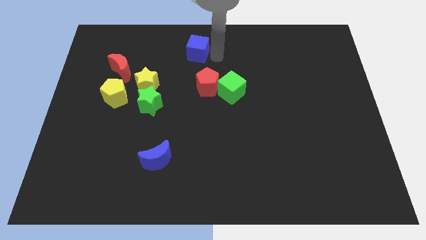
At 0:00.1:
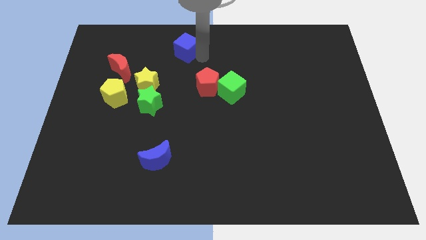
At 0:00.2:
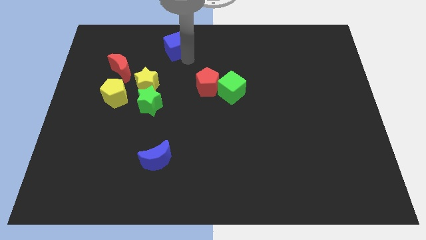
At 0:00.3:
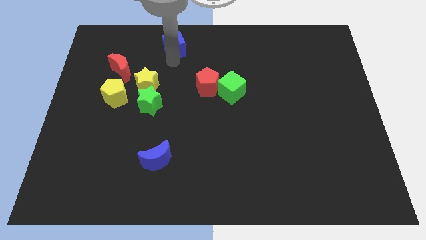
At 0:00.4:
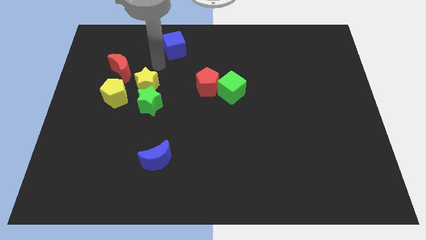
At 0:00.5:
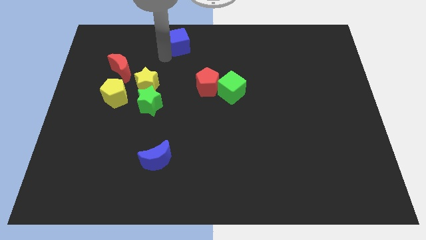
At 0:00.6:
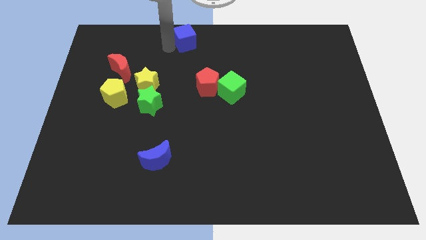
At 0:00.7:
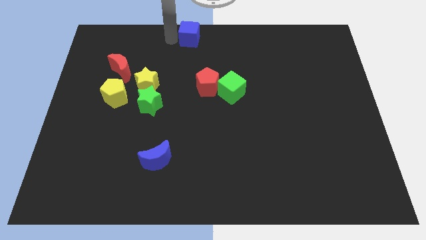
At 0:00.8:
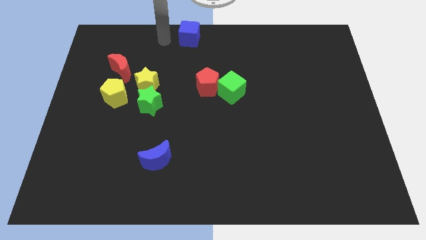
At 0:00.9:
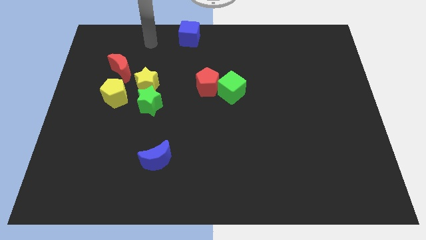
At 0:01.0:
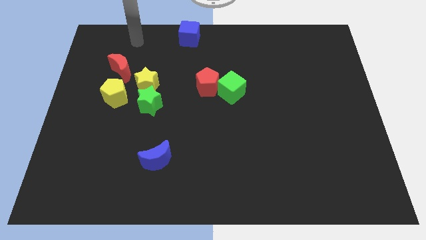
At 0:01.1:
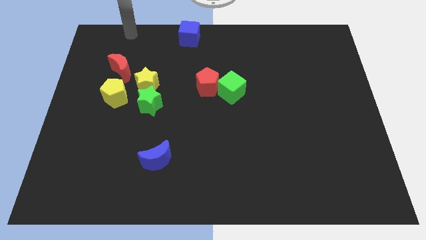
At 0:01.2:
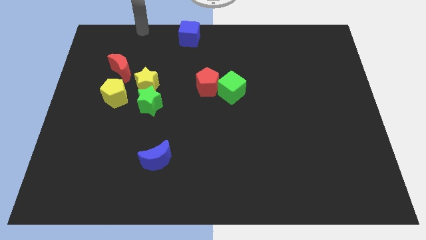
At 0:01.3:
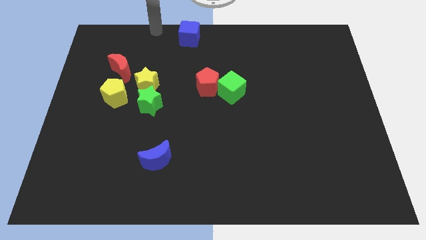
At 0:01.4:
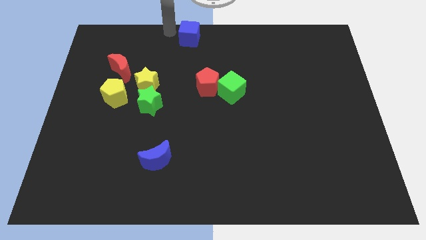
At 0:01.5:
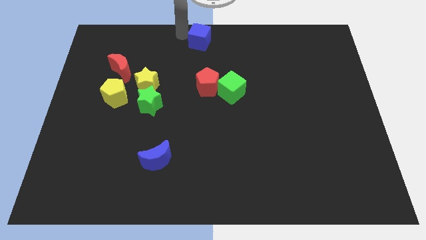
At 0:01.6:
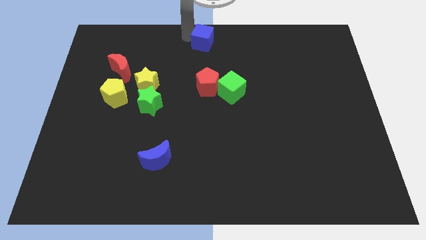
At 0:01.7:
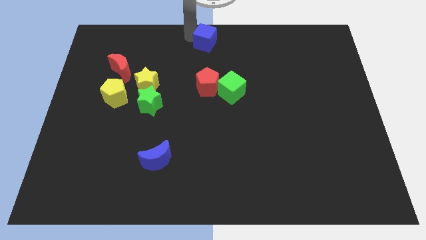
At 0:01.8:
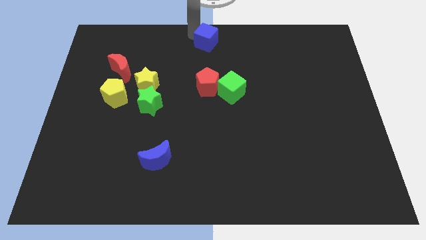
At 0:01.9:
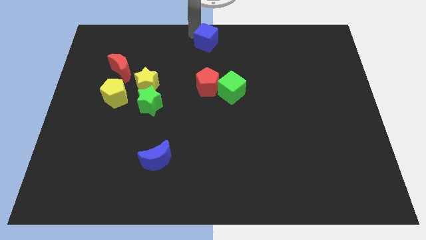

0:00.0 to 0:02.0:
slide the blue cube to the top center of the board

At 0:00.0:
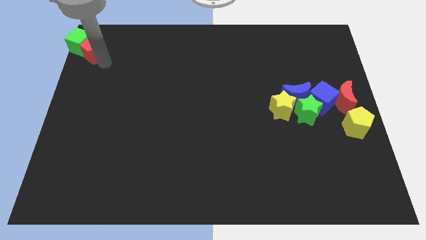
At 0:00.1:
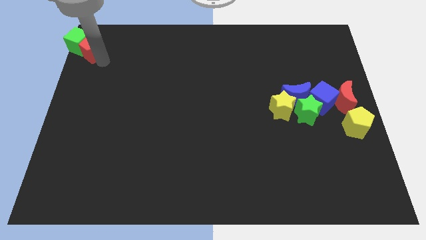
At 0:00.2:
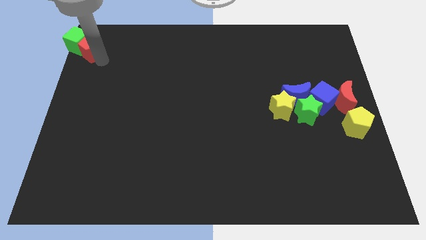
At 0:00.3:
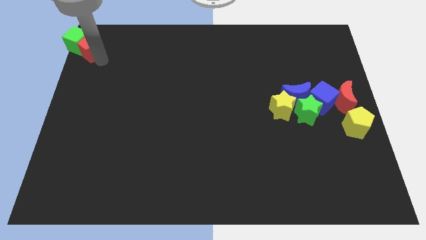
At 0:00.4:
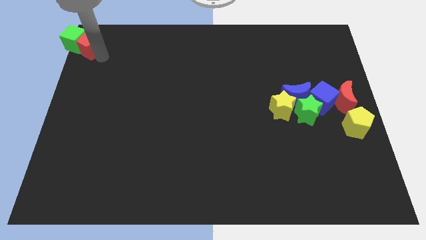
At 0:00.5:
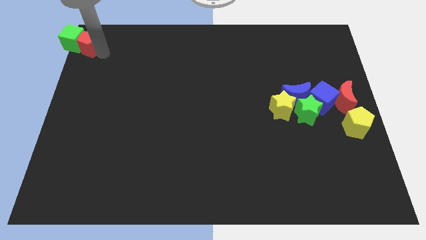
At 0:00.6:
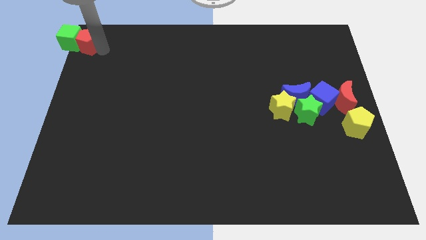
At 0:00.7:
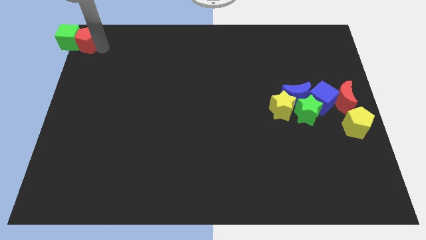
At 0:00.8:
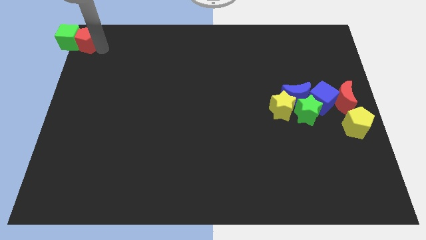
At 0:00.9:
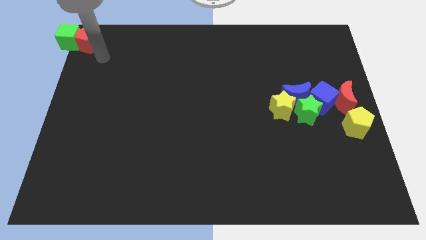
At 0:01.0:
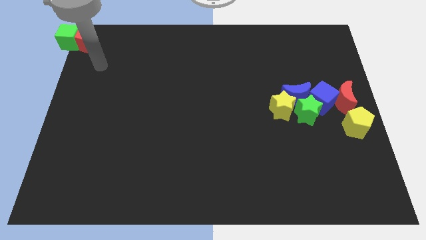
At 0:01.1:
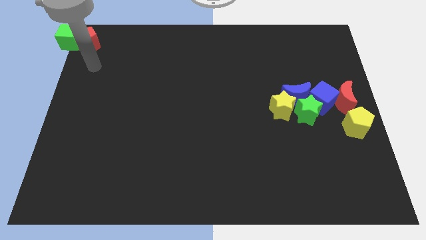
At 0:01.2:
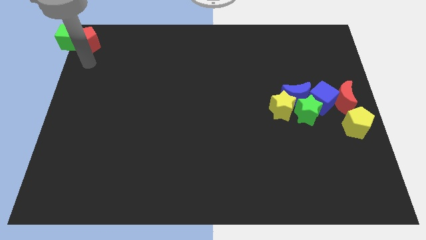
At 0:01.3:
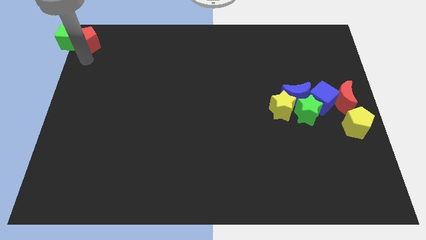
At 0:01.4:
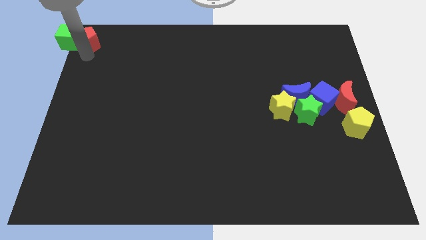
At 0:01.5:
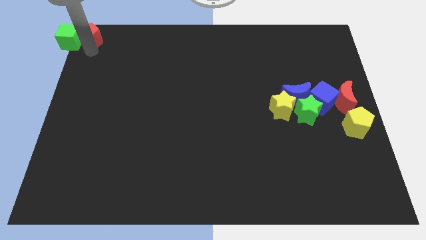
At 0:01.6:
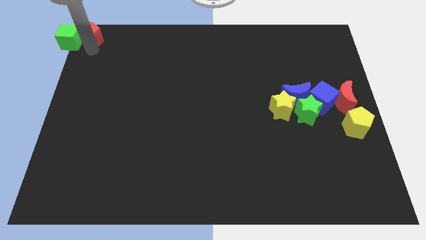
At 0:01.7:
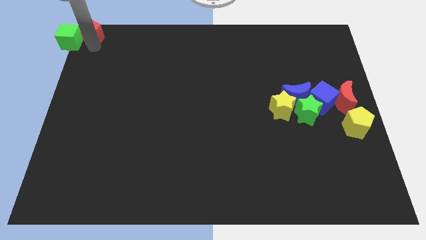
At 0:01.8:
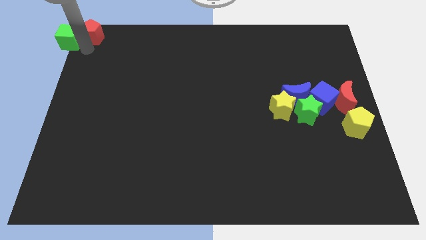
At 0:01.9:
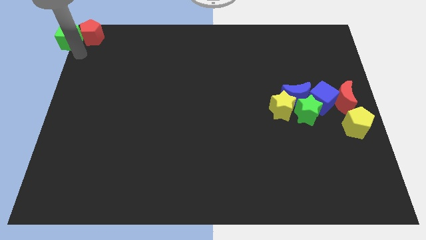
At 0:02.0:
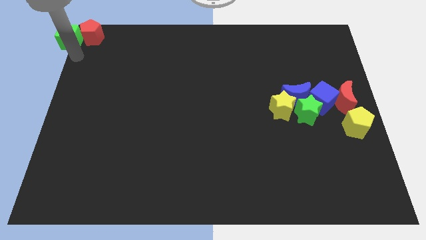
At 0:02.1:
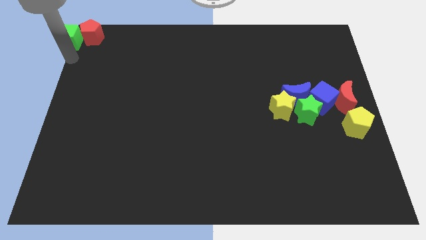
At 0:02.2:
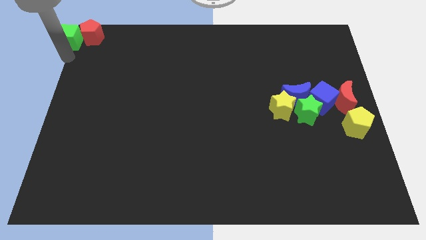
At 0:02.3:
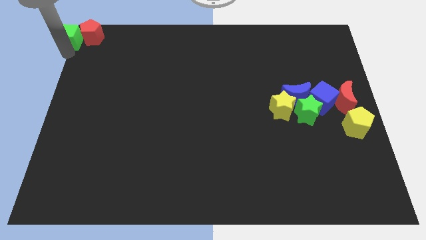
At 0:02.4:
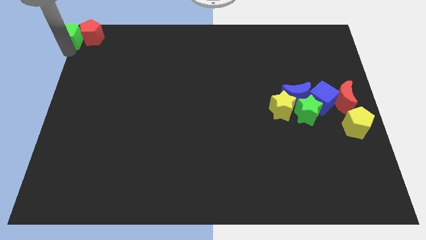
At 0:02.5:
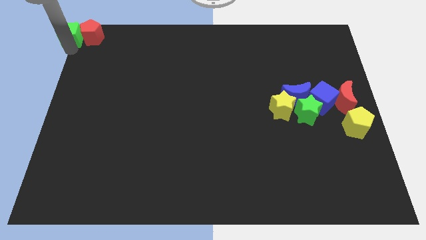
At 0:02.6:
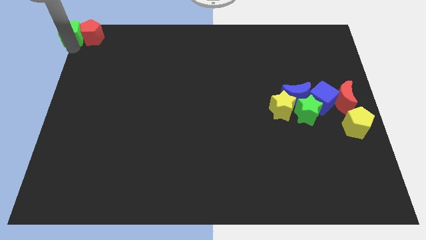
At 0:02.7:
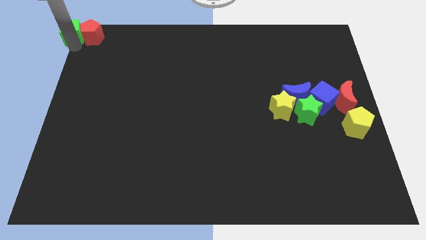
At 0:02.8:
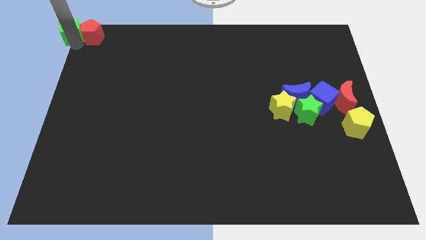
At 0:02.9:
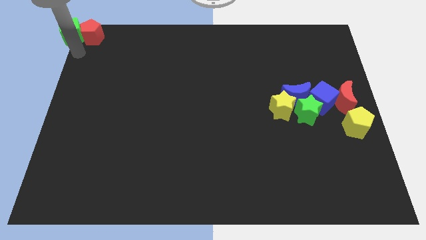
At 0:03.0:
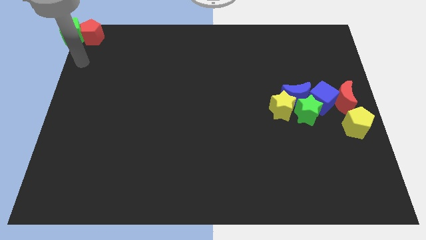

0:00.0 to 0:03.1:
drag the red pentagon slightly upwards

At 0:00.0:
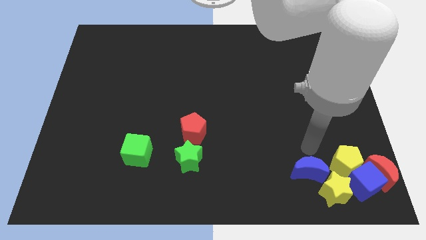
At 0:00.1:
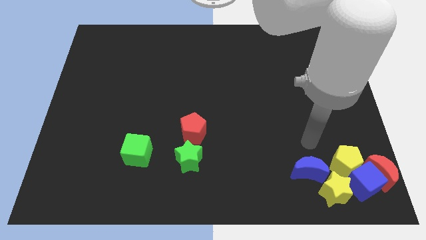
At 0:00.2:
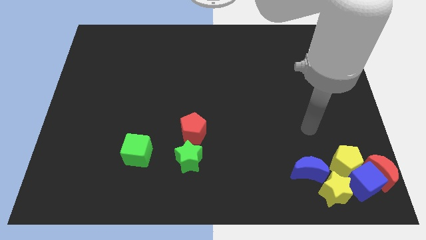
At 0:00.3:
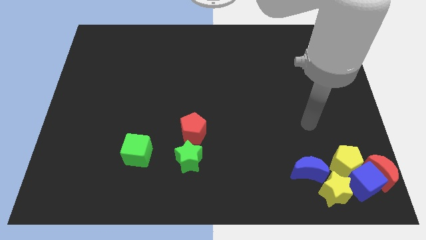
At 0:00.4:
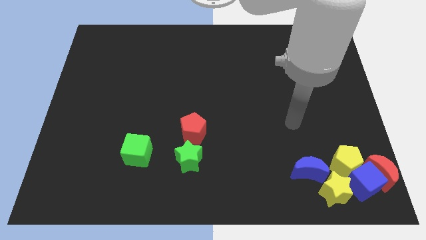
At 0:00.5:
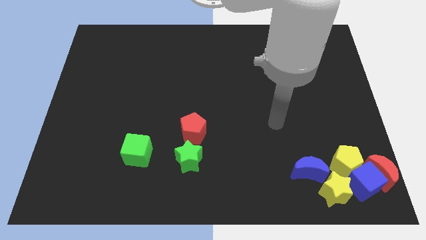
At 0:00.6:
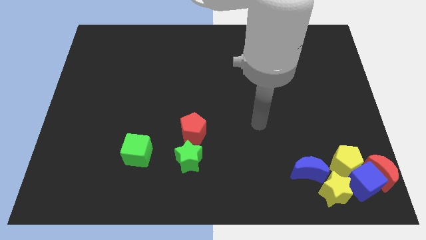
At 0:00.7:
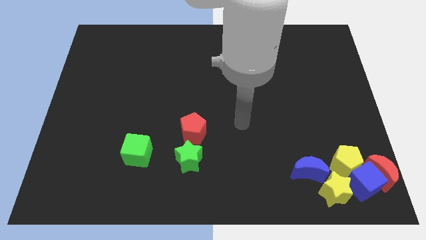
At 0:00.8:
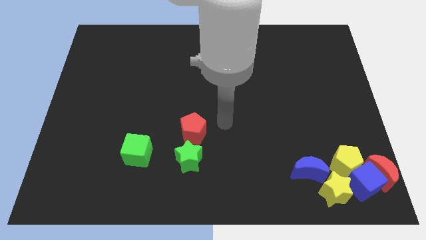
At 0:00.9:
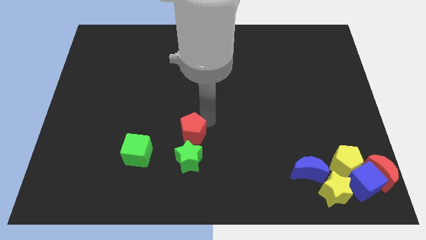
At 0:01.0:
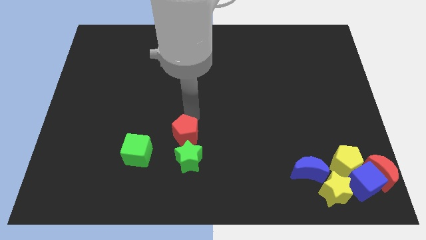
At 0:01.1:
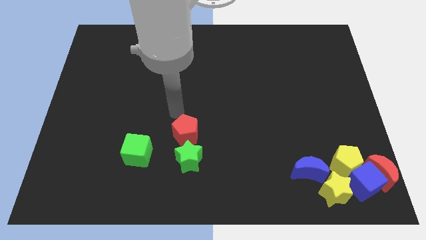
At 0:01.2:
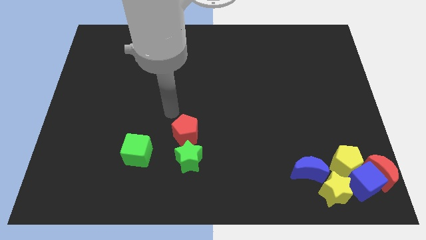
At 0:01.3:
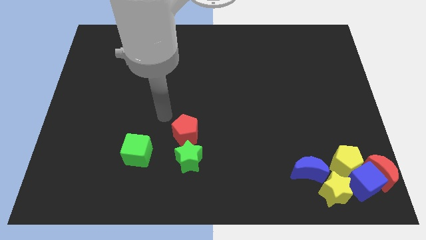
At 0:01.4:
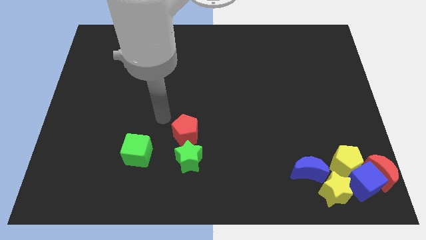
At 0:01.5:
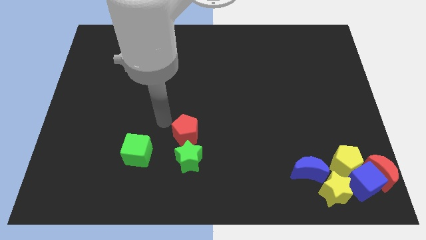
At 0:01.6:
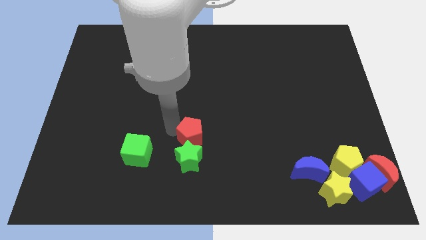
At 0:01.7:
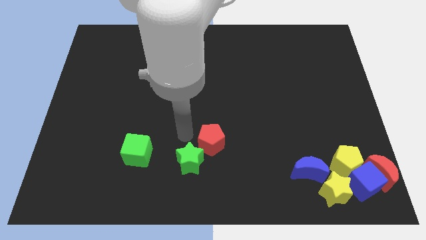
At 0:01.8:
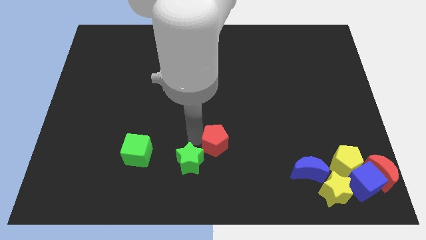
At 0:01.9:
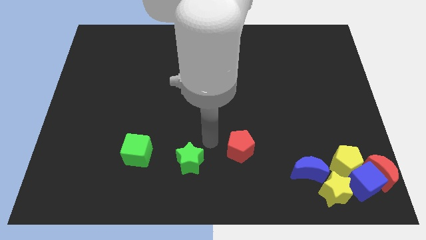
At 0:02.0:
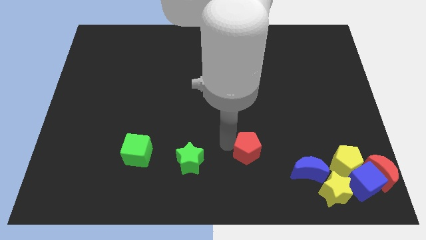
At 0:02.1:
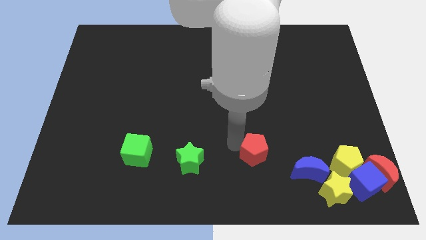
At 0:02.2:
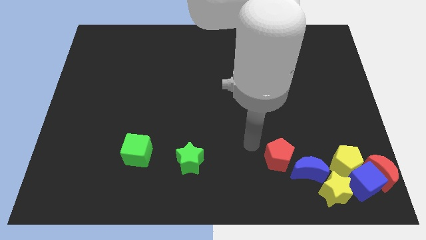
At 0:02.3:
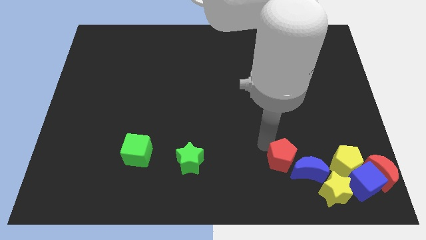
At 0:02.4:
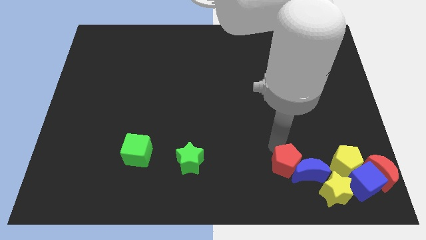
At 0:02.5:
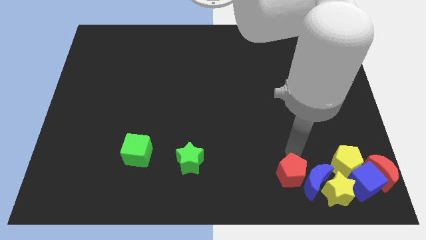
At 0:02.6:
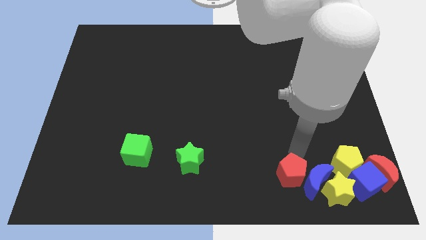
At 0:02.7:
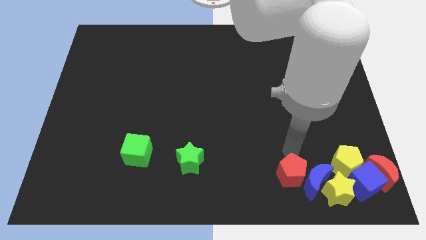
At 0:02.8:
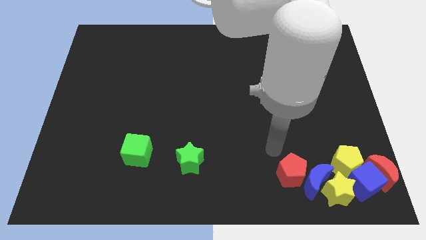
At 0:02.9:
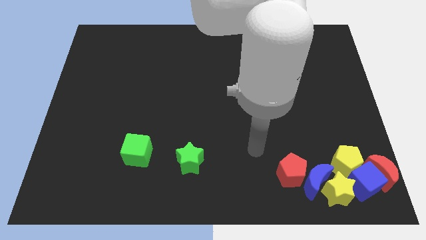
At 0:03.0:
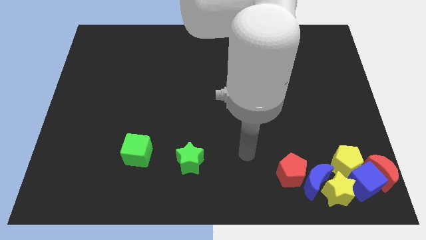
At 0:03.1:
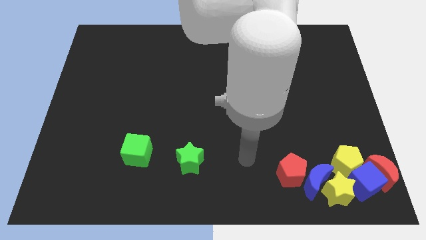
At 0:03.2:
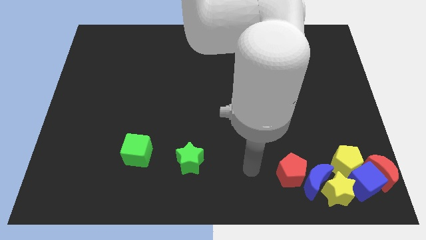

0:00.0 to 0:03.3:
push the red pentagon into the left side of the blue crescent

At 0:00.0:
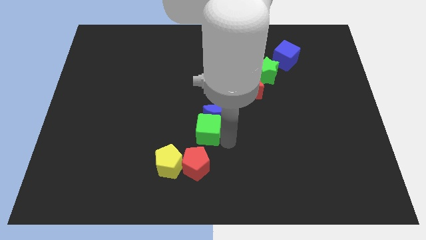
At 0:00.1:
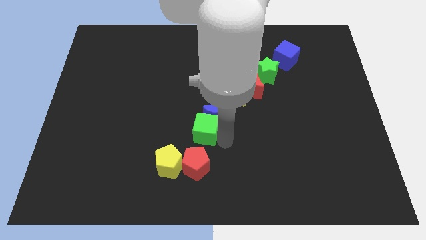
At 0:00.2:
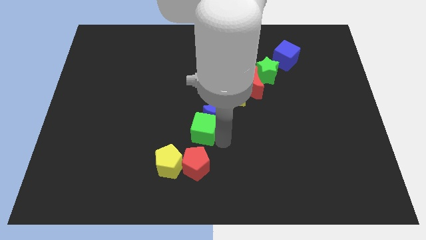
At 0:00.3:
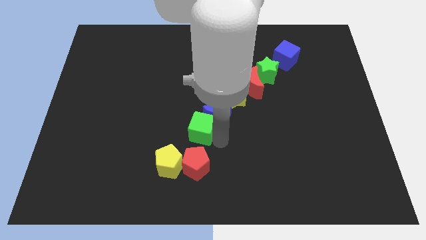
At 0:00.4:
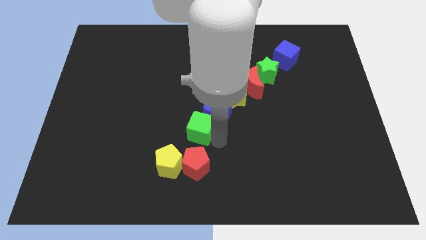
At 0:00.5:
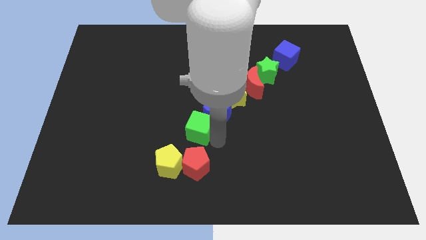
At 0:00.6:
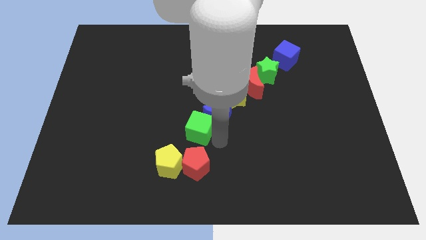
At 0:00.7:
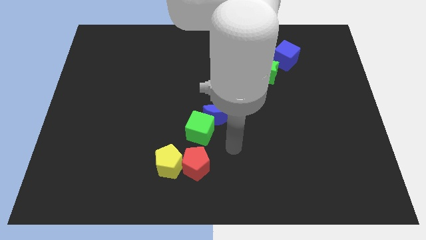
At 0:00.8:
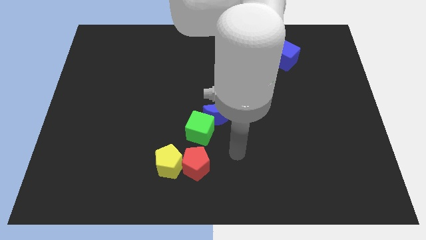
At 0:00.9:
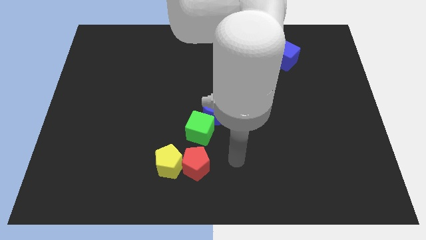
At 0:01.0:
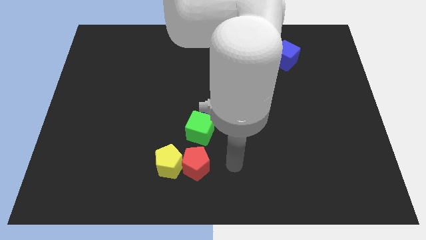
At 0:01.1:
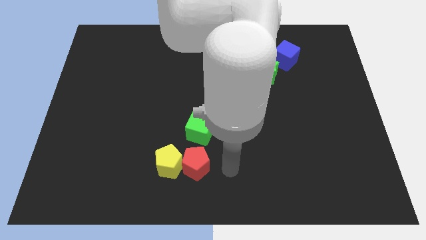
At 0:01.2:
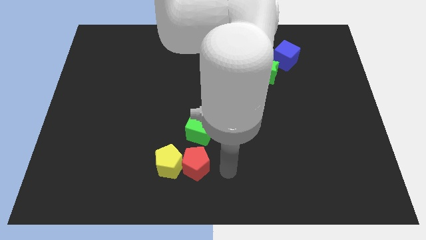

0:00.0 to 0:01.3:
push the green cube to the bottom left side of the blue crescent
